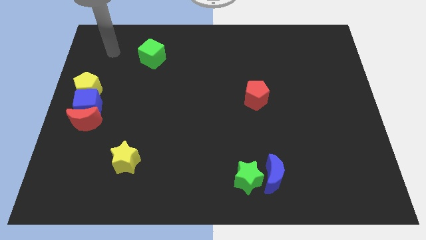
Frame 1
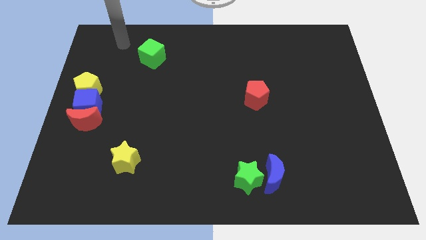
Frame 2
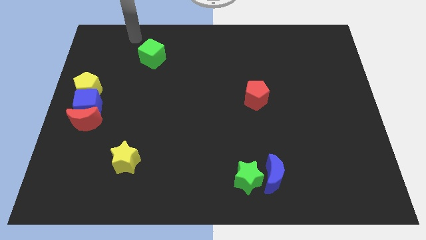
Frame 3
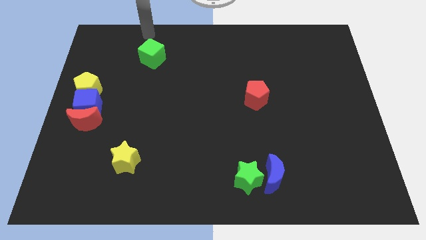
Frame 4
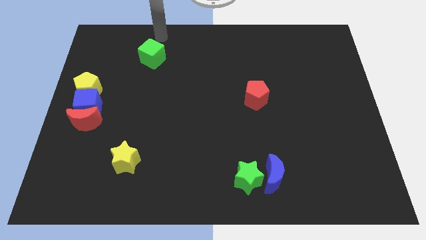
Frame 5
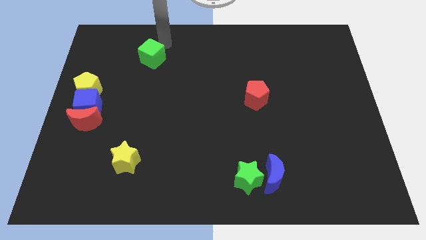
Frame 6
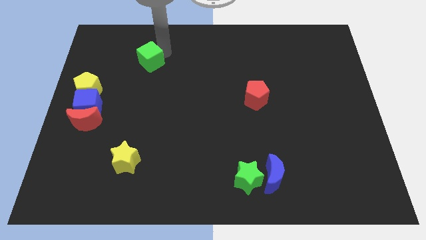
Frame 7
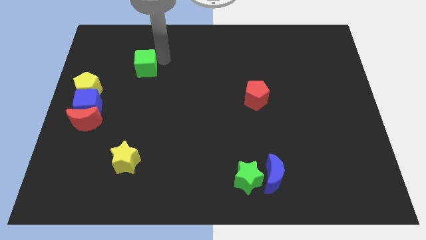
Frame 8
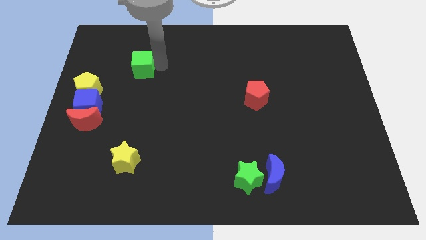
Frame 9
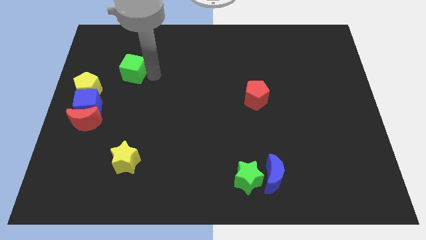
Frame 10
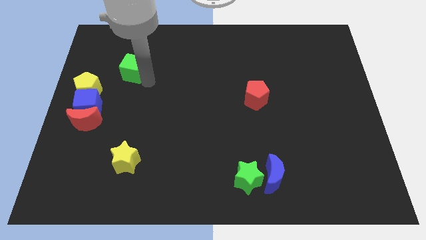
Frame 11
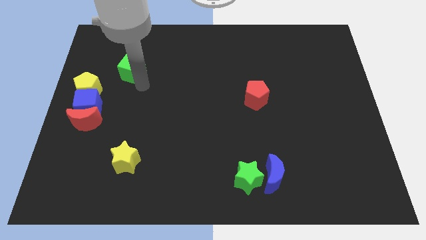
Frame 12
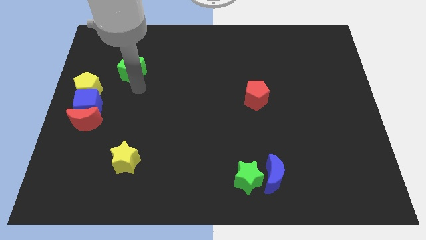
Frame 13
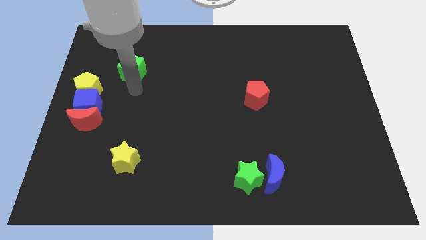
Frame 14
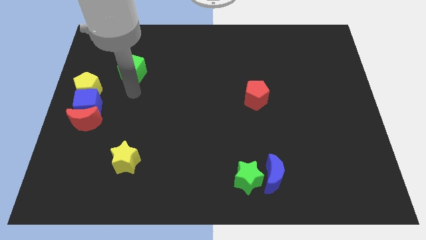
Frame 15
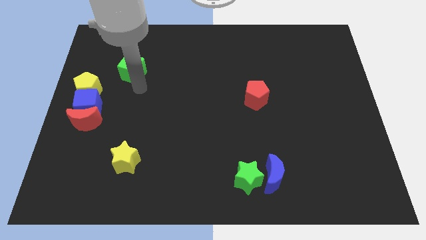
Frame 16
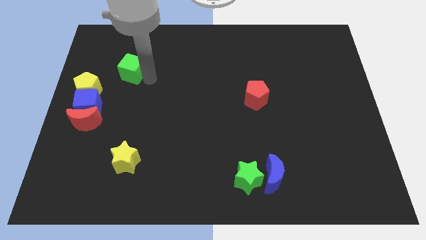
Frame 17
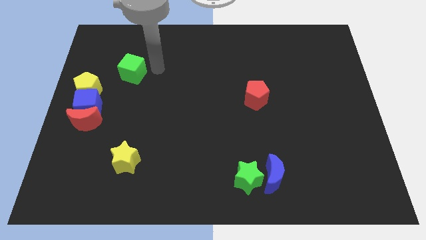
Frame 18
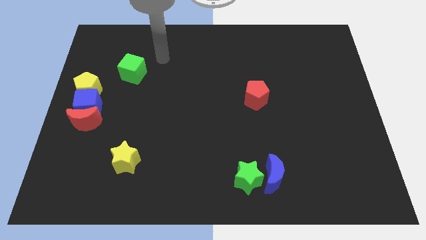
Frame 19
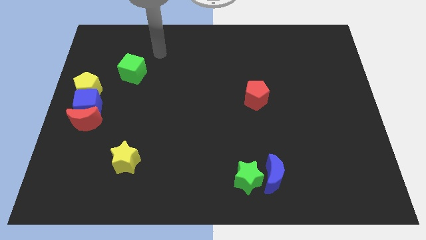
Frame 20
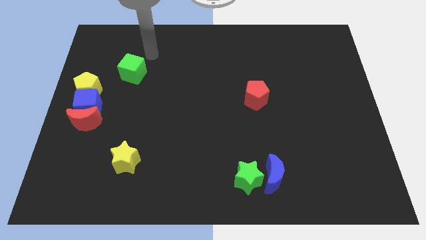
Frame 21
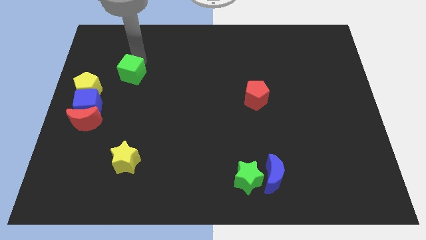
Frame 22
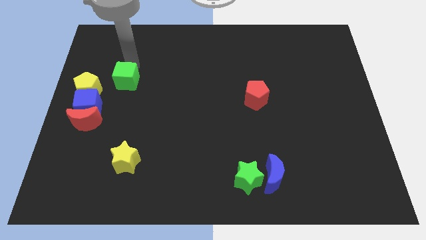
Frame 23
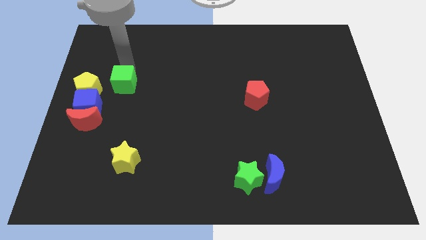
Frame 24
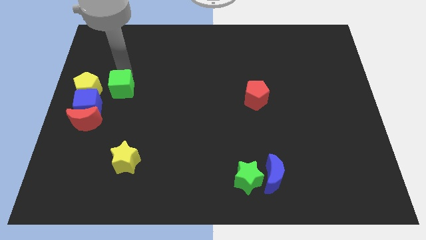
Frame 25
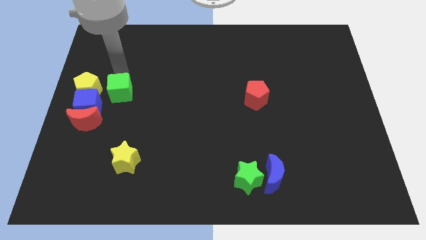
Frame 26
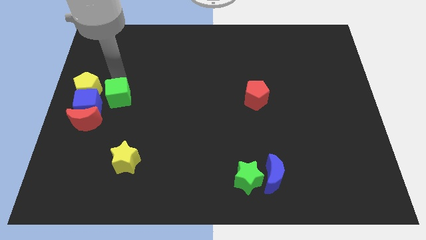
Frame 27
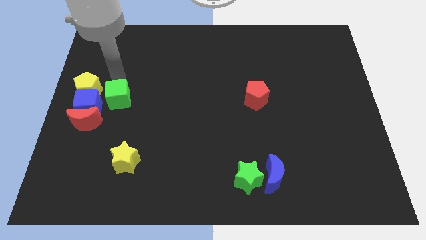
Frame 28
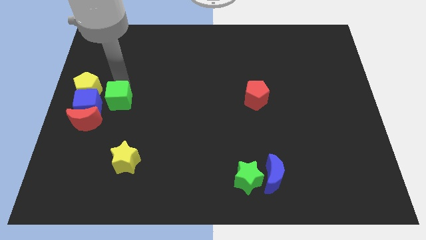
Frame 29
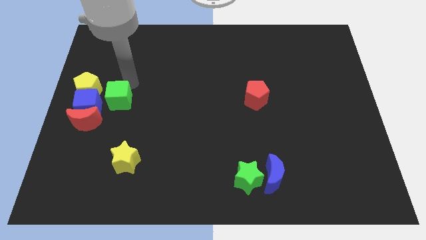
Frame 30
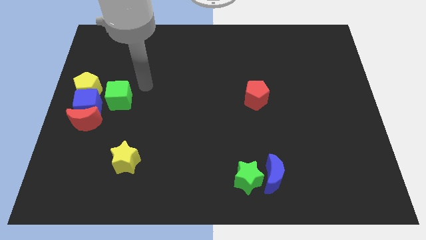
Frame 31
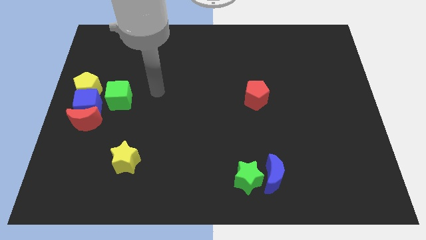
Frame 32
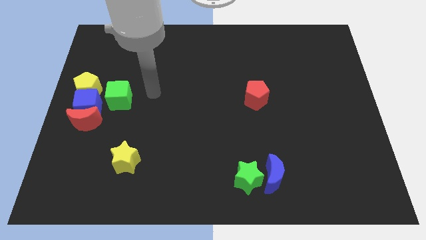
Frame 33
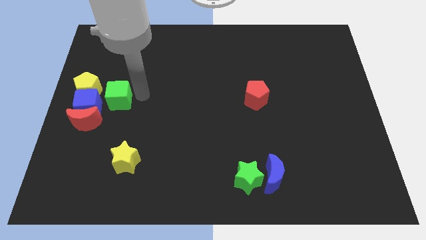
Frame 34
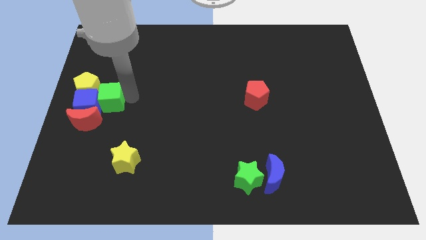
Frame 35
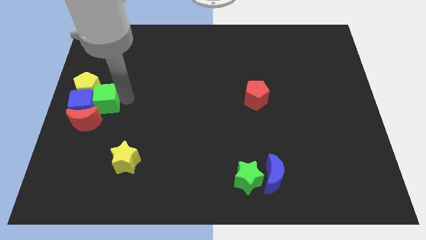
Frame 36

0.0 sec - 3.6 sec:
put the green cube to the right side of the blue cube

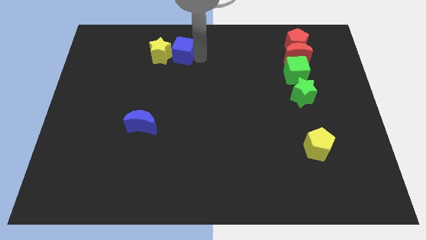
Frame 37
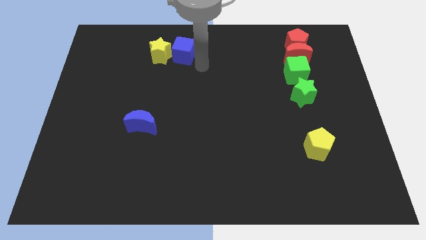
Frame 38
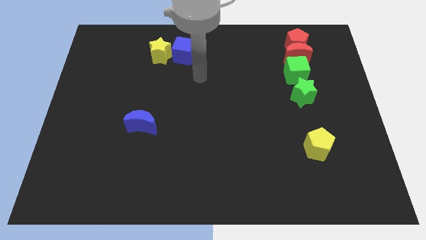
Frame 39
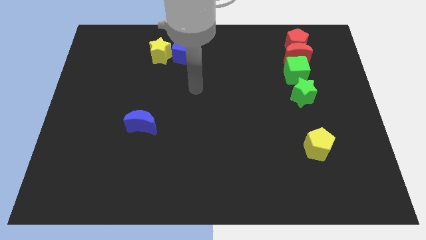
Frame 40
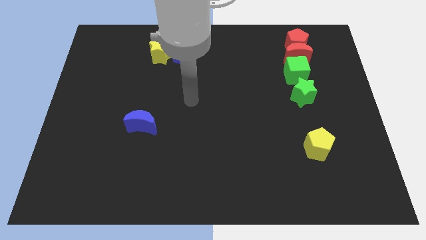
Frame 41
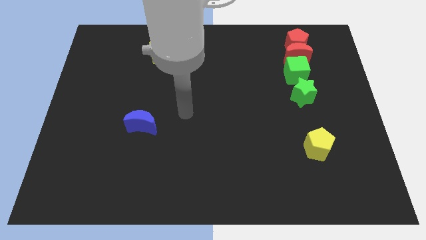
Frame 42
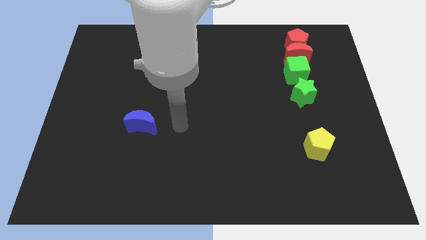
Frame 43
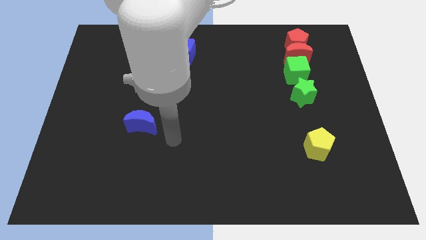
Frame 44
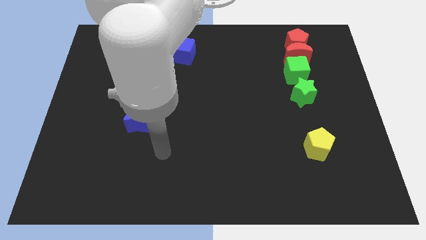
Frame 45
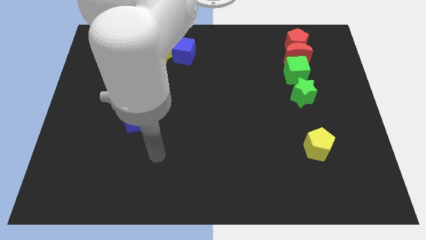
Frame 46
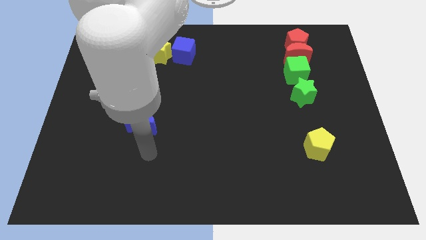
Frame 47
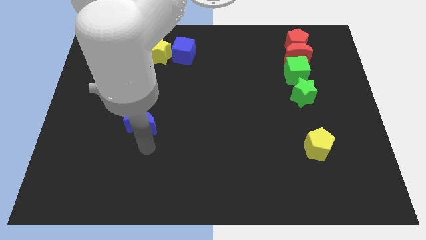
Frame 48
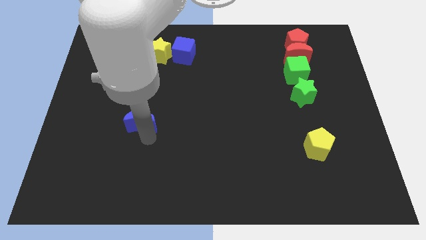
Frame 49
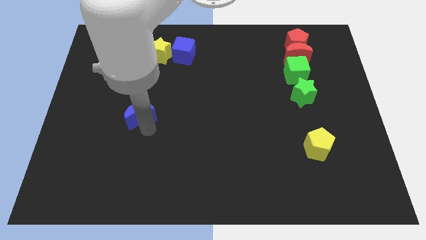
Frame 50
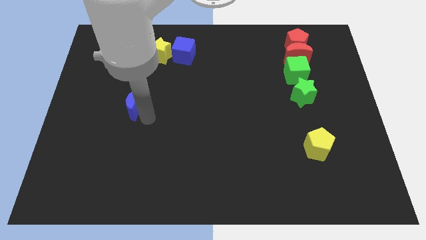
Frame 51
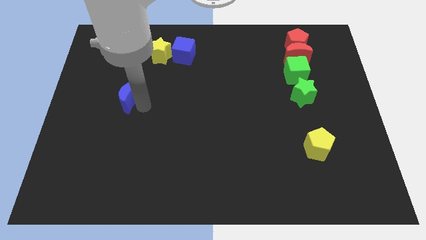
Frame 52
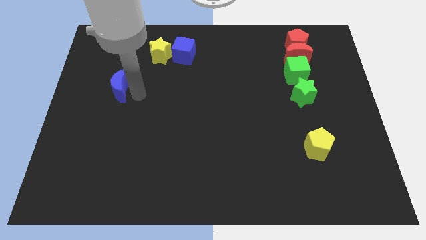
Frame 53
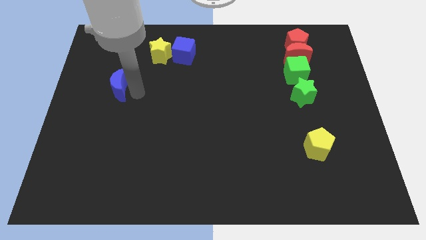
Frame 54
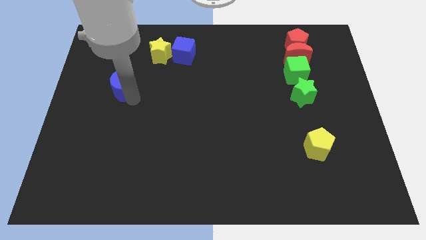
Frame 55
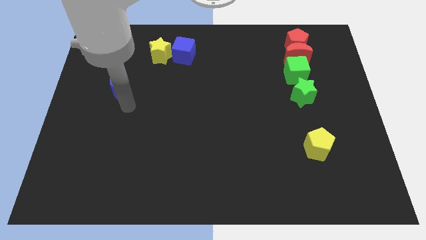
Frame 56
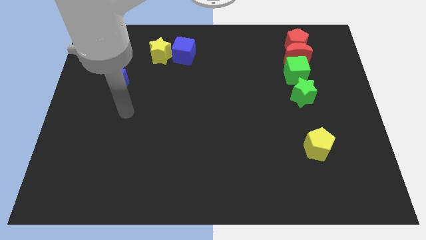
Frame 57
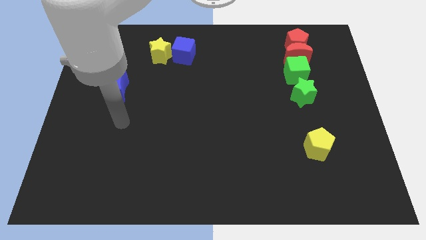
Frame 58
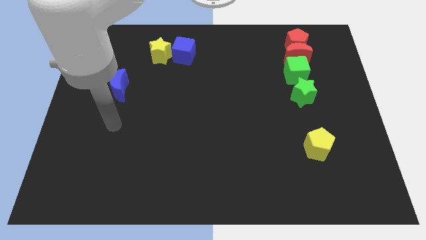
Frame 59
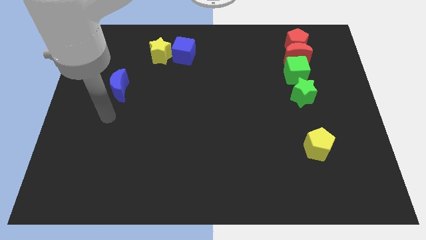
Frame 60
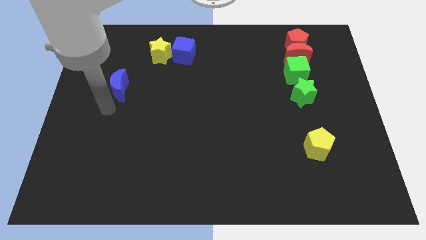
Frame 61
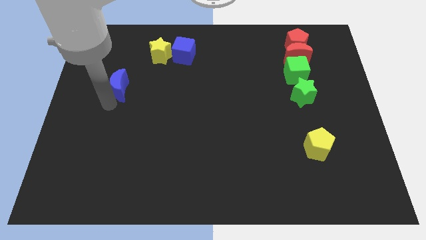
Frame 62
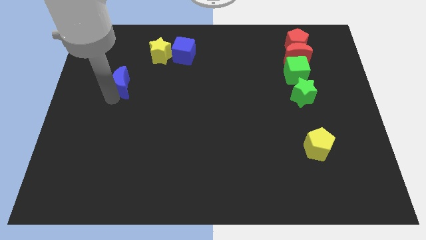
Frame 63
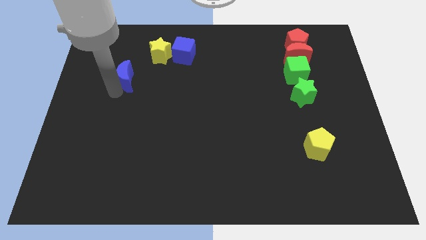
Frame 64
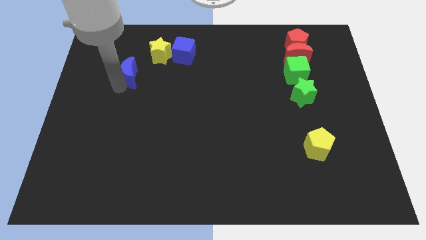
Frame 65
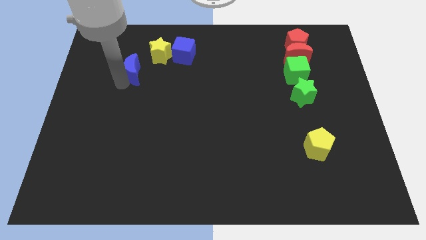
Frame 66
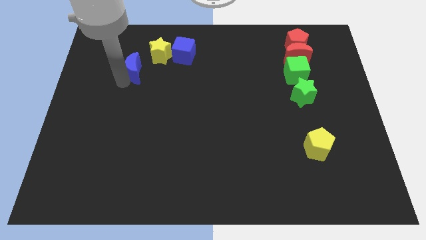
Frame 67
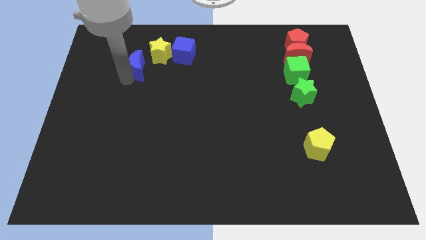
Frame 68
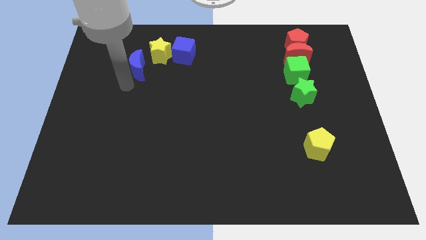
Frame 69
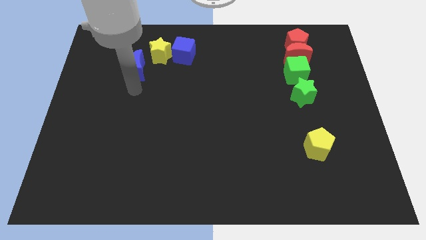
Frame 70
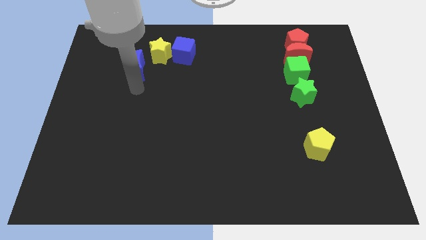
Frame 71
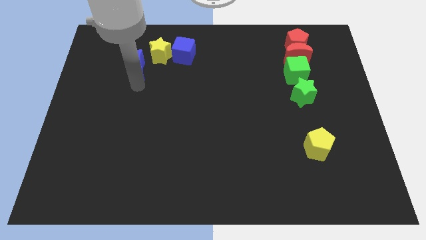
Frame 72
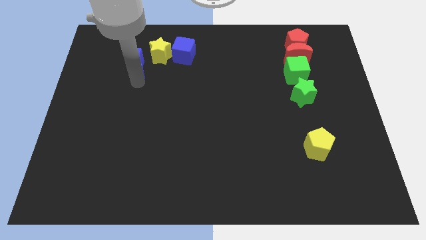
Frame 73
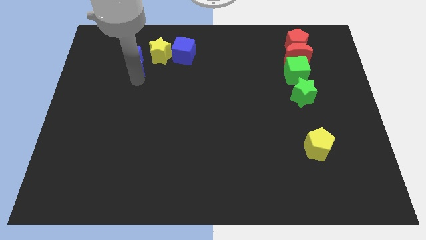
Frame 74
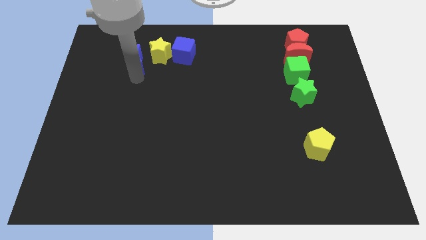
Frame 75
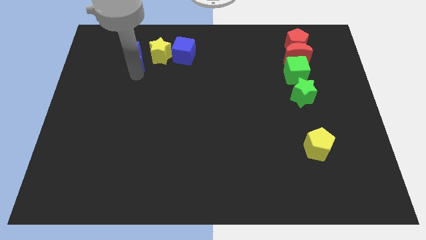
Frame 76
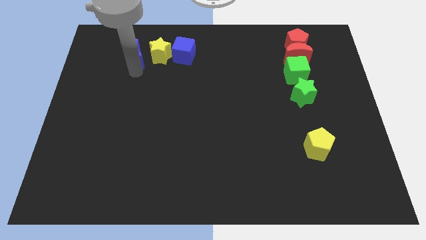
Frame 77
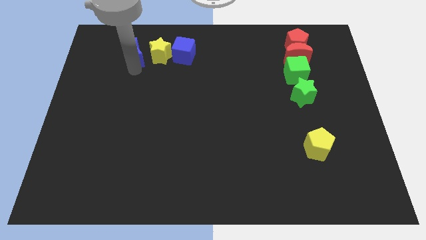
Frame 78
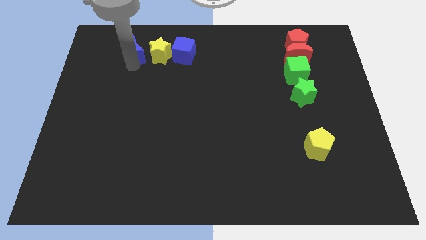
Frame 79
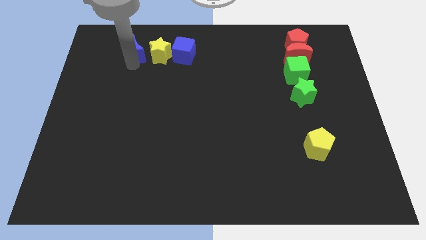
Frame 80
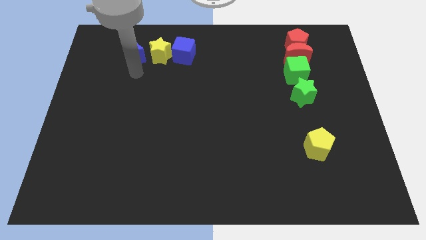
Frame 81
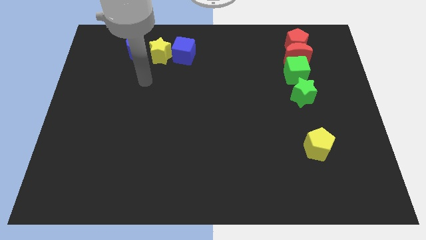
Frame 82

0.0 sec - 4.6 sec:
move the blue moon horizontally at the left side of the yellow star

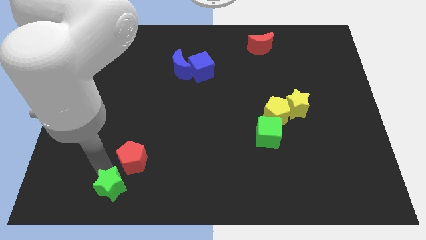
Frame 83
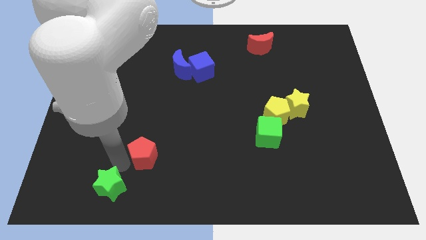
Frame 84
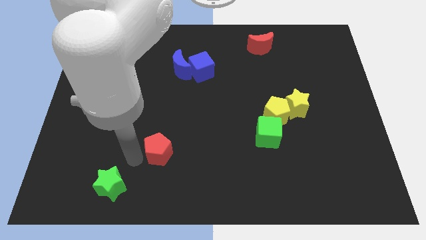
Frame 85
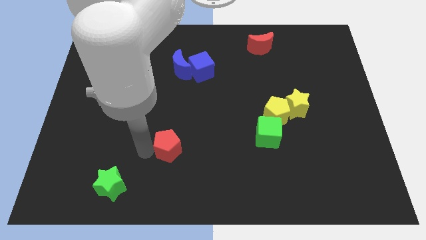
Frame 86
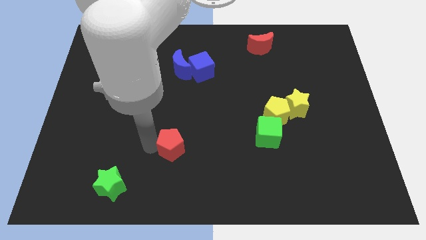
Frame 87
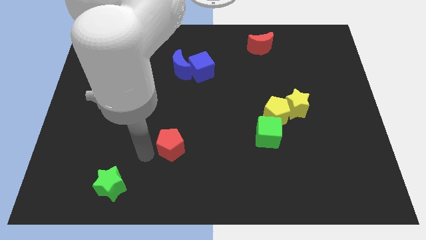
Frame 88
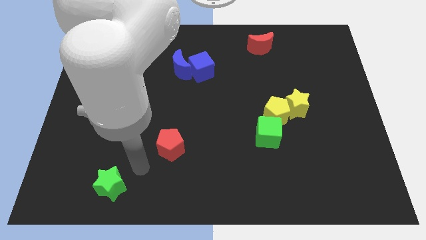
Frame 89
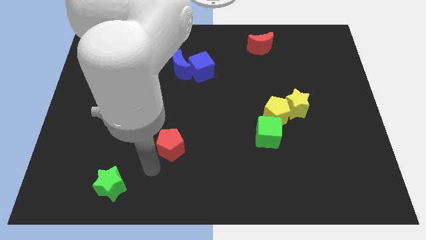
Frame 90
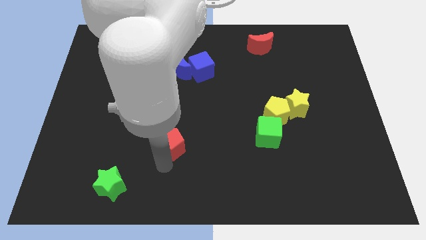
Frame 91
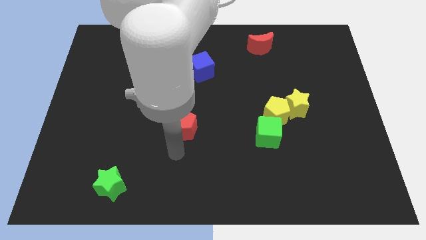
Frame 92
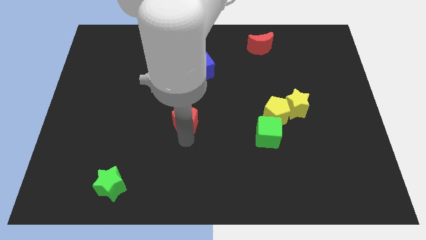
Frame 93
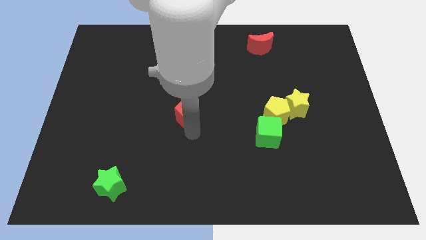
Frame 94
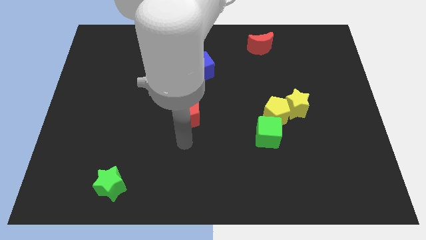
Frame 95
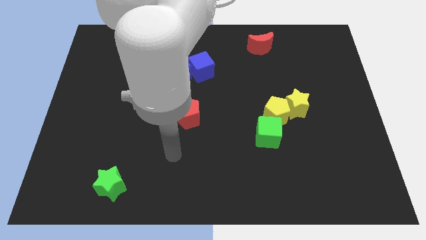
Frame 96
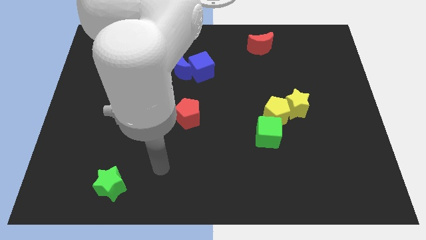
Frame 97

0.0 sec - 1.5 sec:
put the red pentagon below the group of blue blocks
